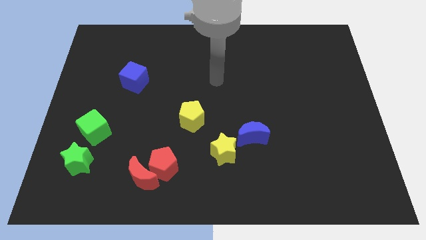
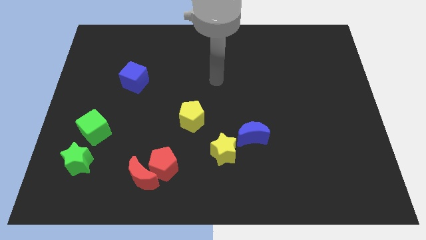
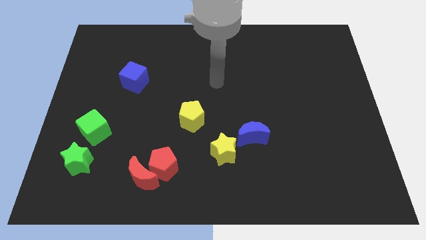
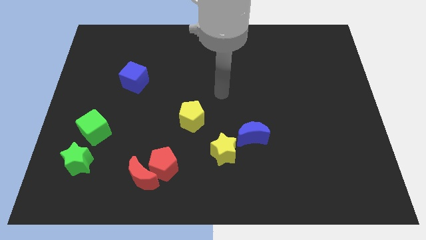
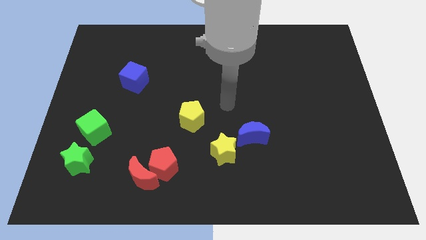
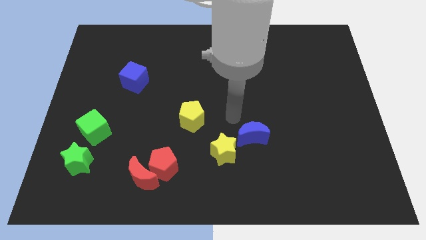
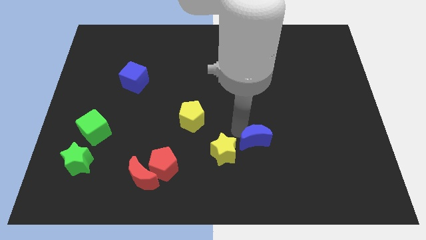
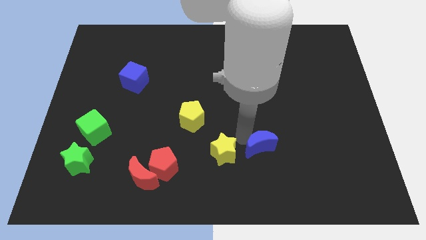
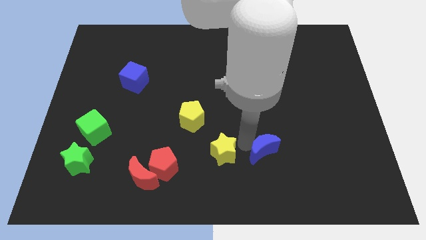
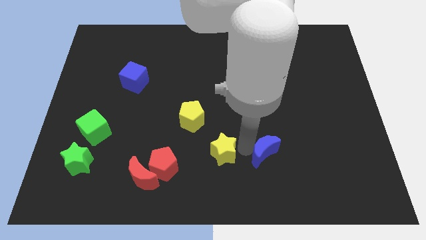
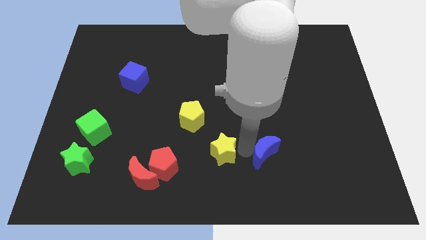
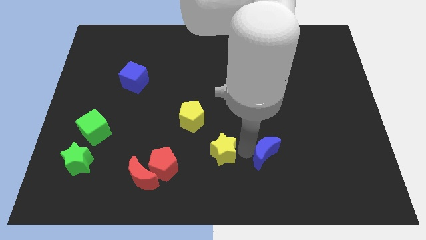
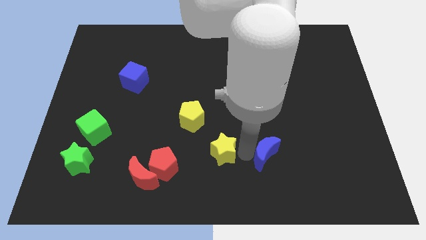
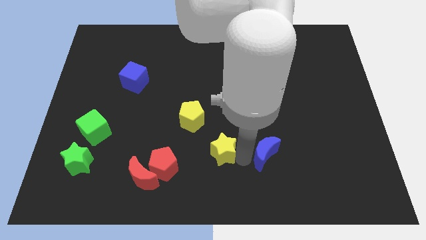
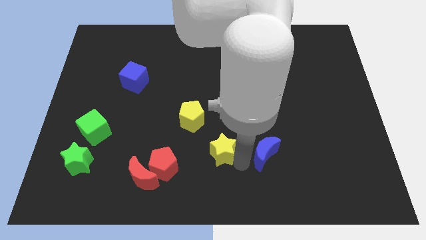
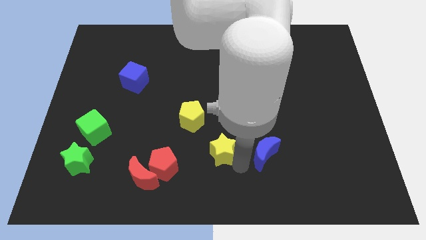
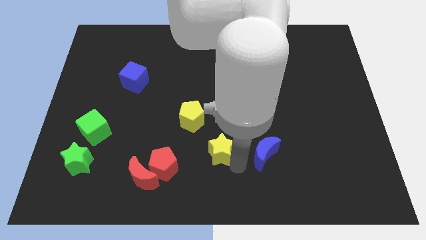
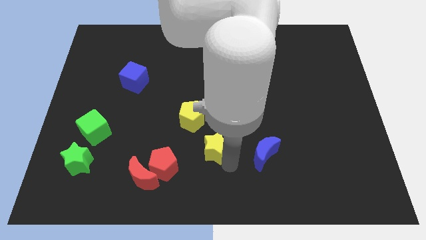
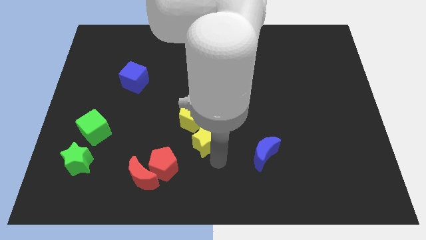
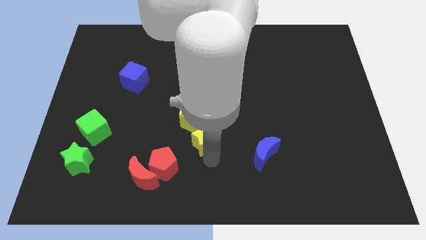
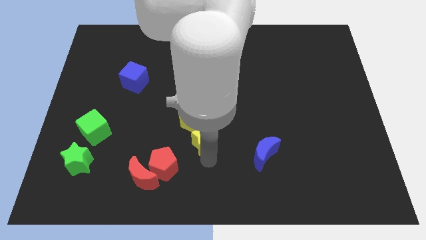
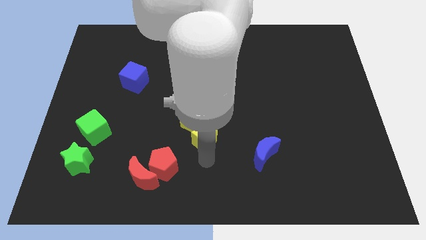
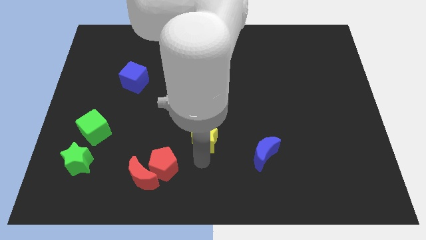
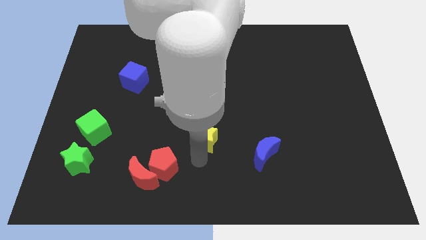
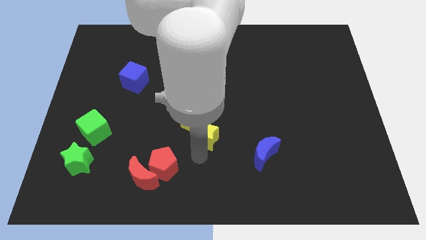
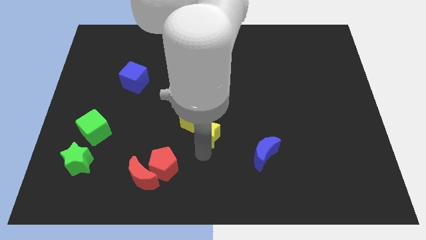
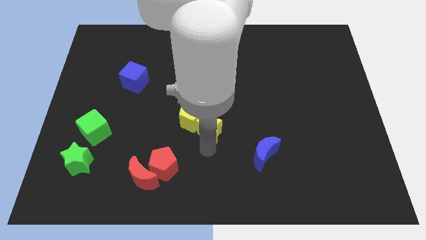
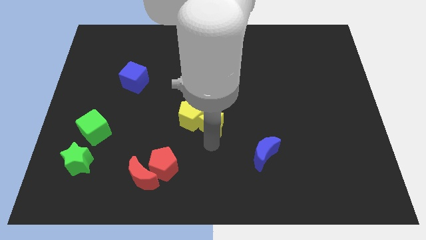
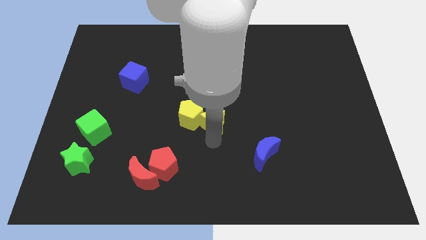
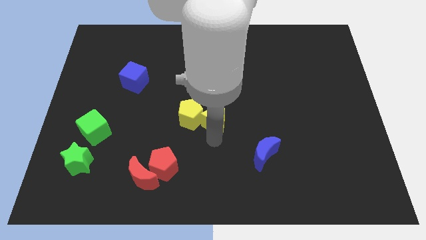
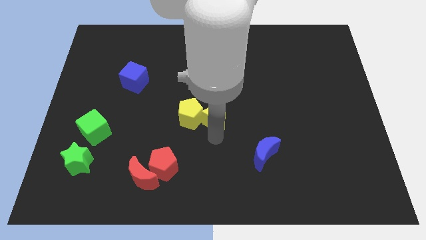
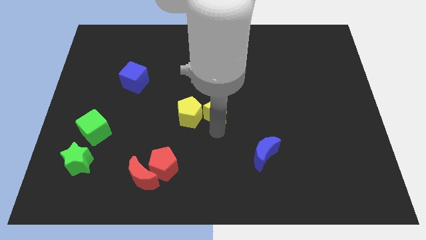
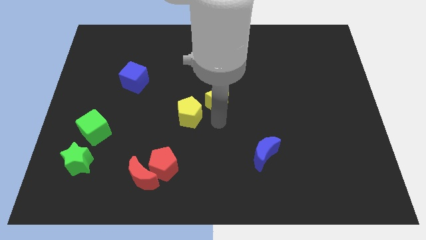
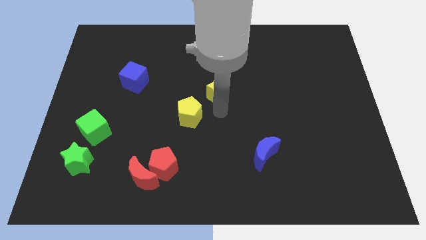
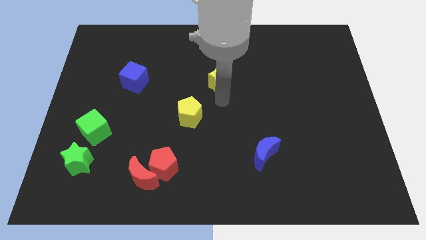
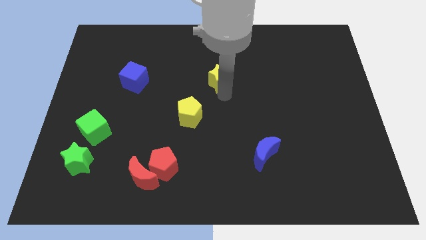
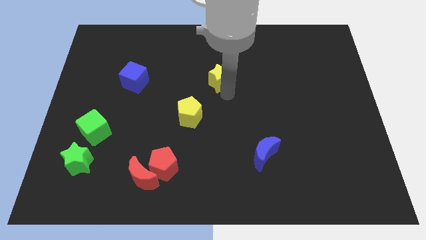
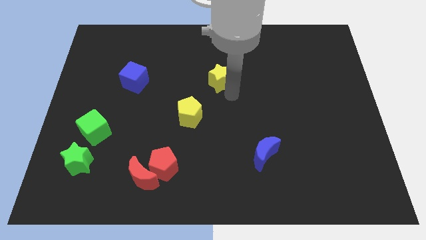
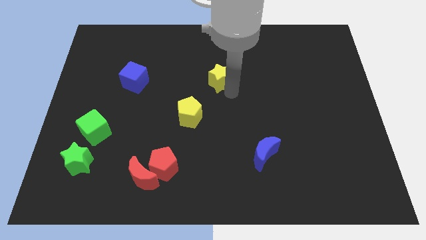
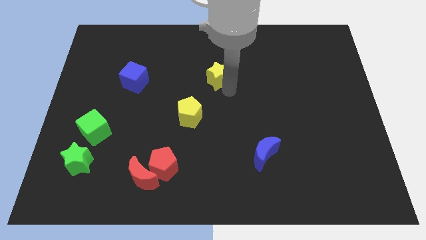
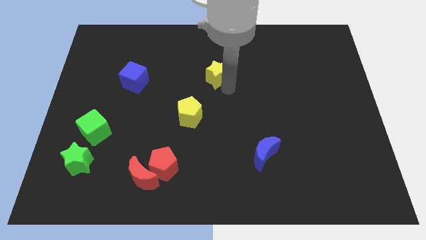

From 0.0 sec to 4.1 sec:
move yellow star upwards

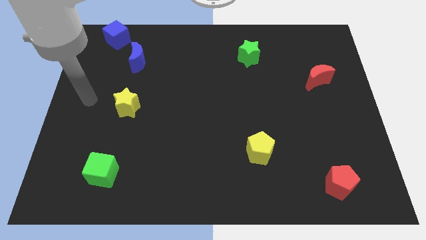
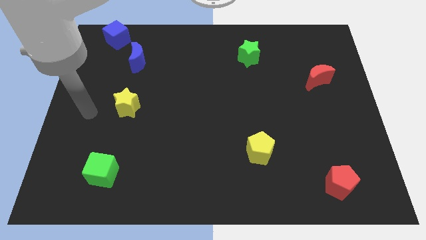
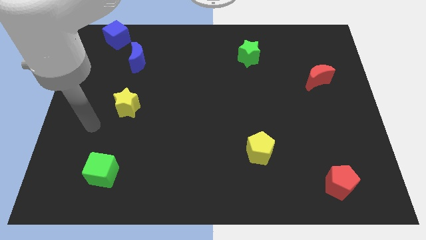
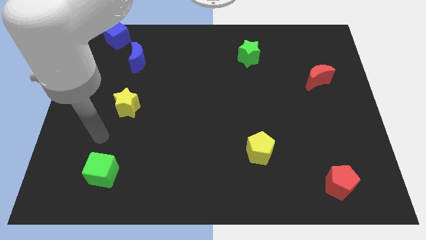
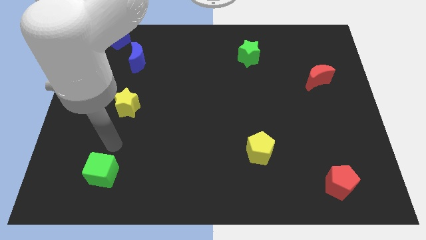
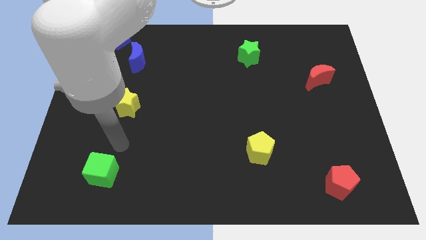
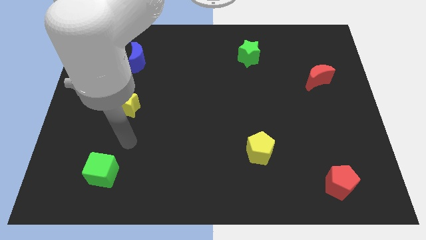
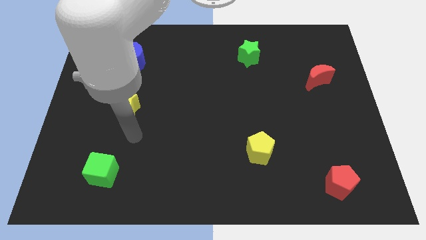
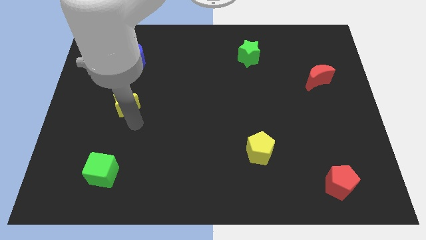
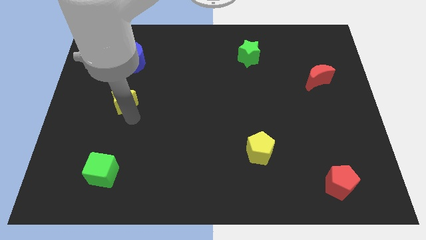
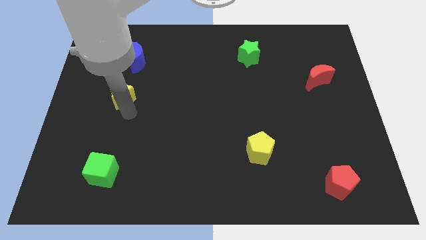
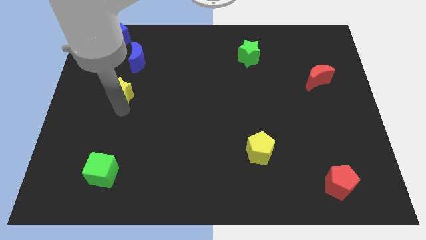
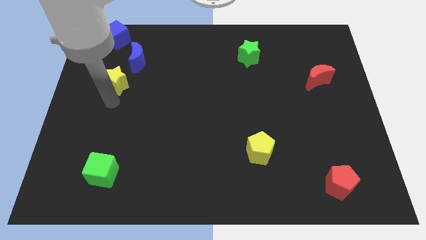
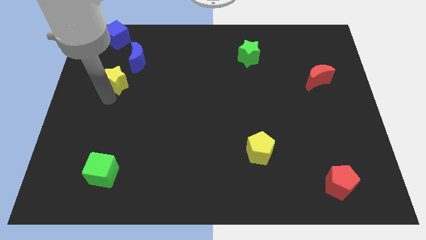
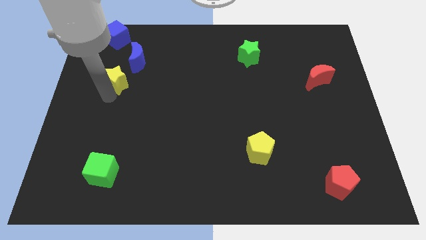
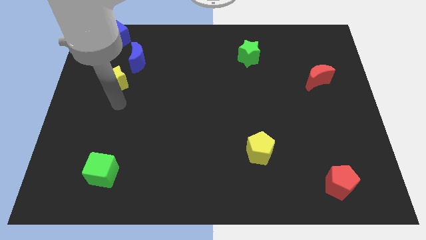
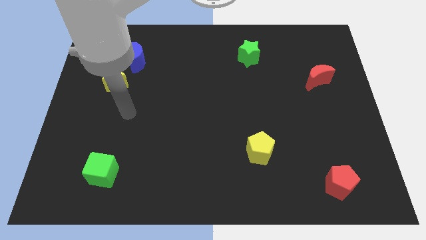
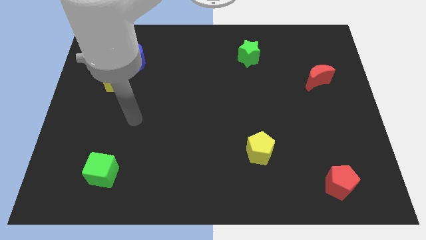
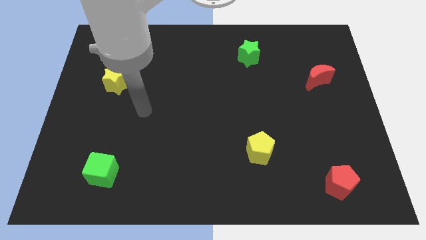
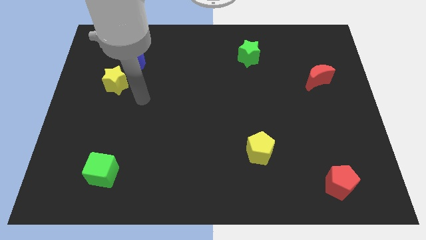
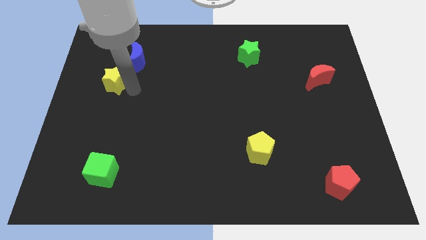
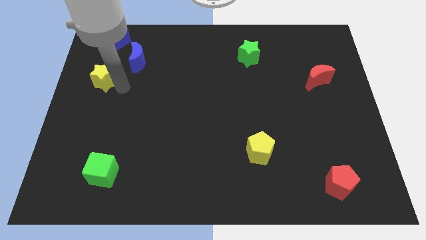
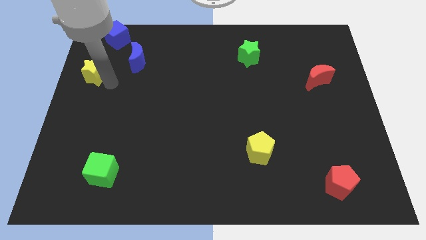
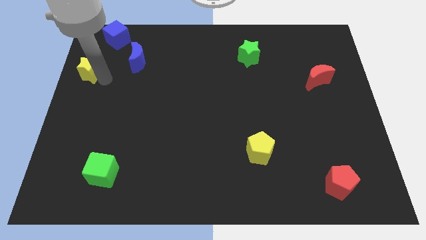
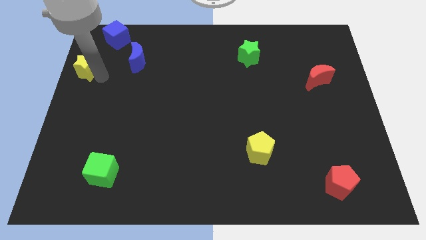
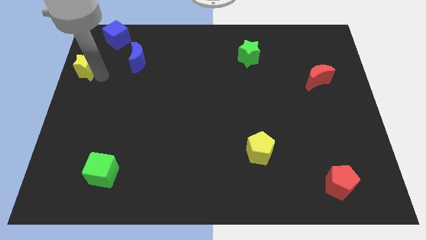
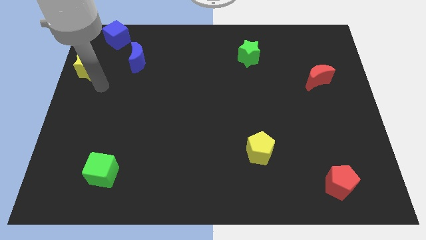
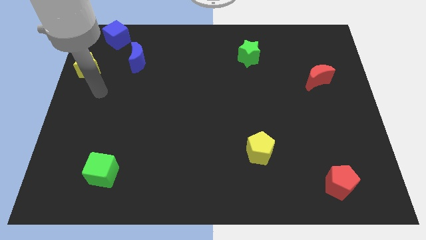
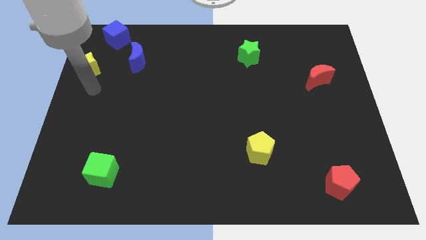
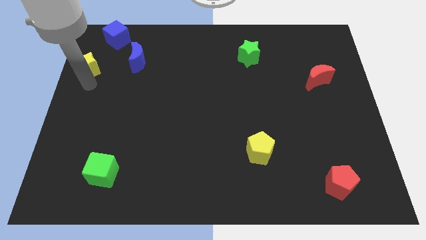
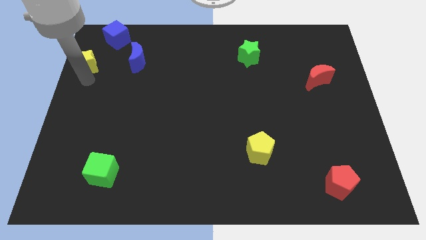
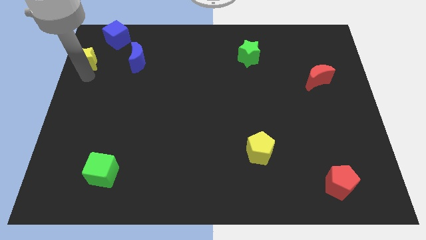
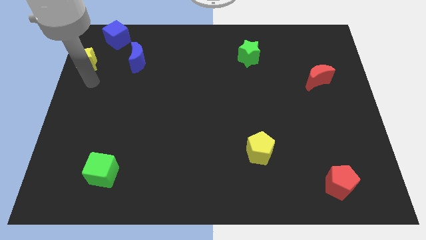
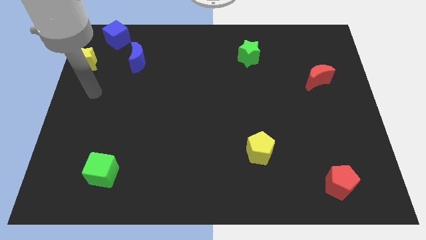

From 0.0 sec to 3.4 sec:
move yellow star left below the blue cube

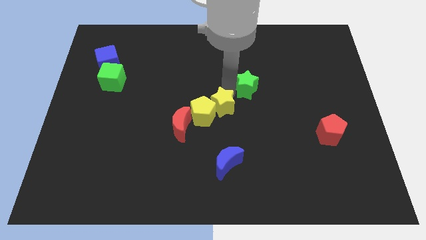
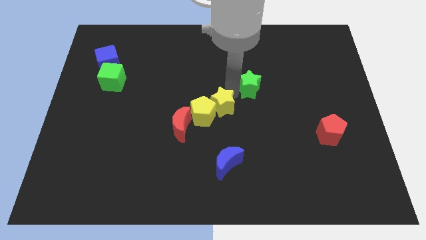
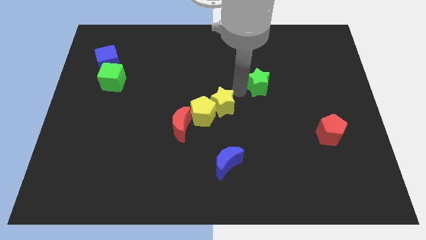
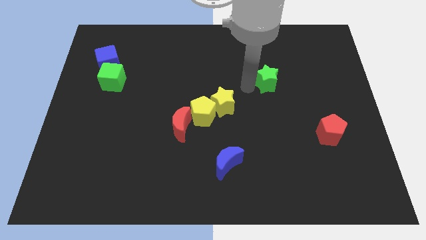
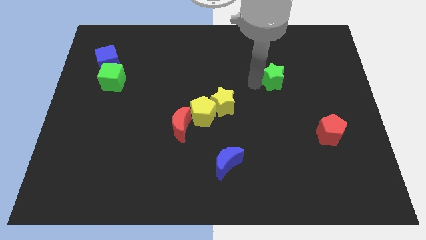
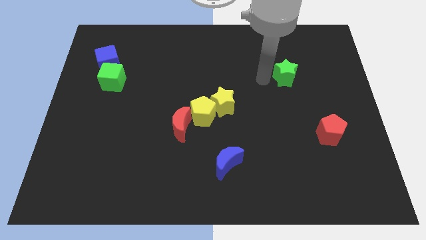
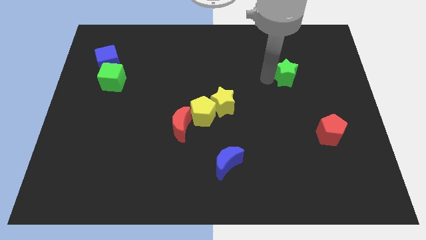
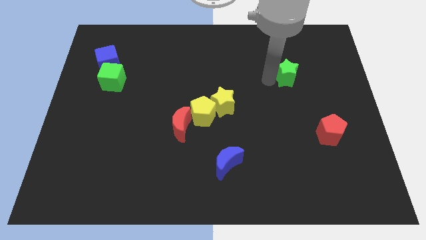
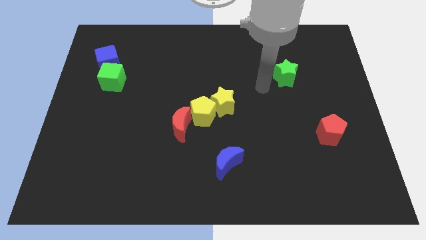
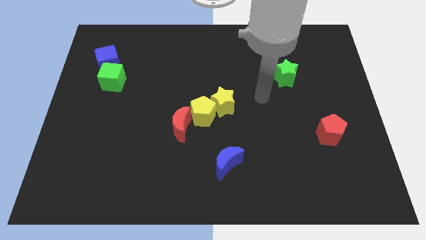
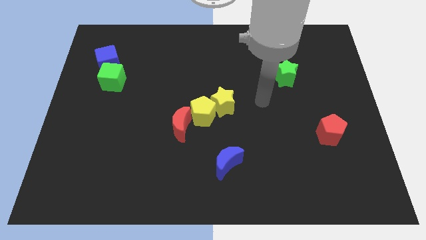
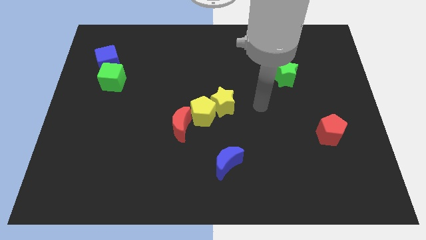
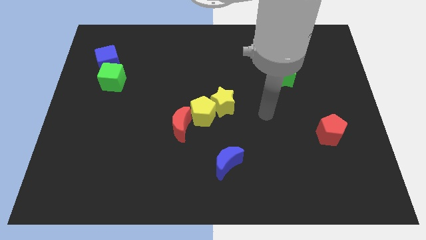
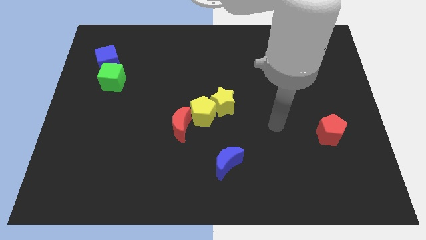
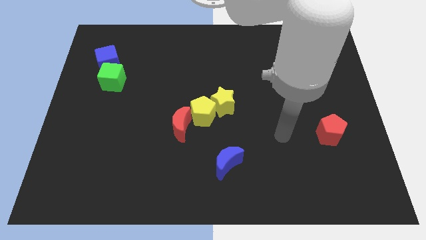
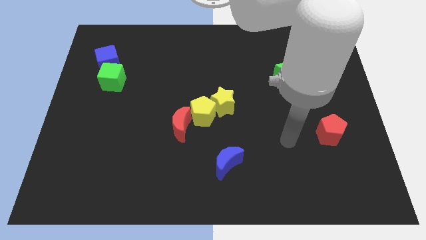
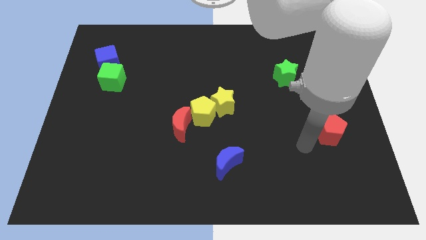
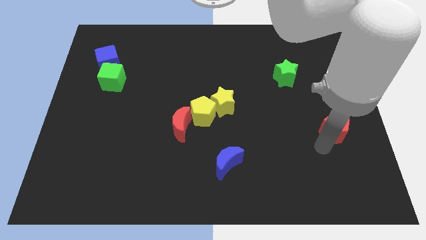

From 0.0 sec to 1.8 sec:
move the green star slightly upward from the yellow star
